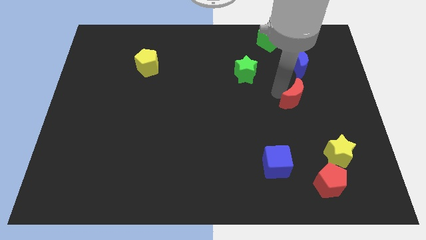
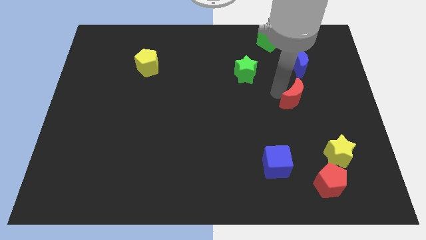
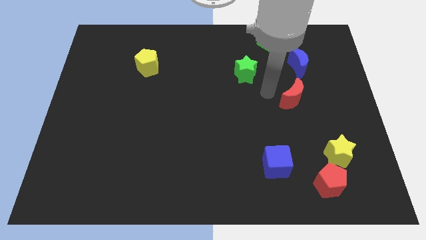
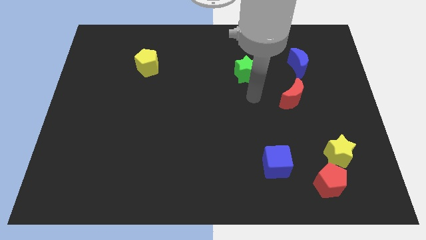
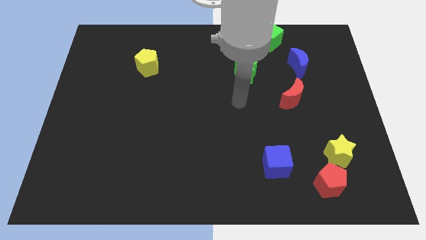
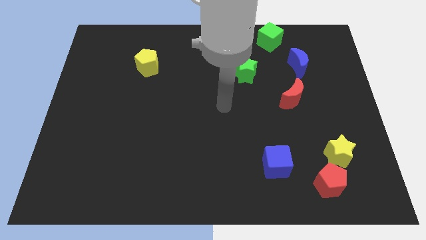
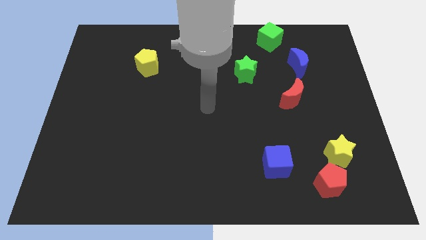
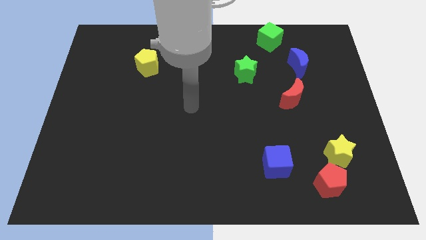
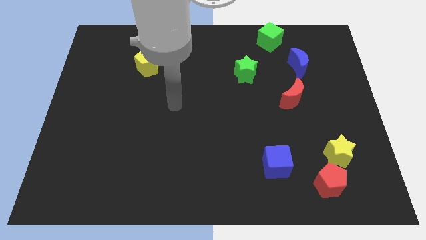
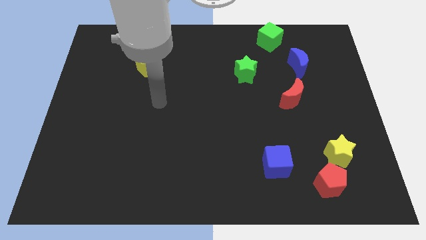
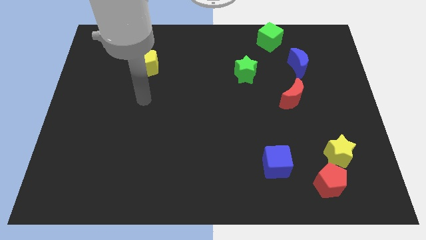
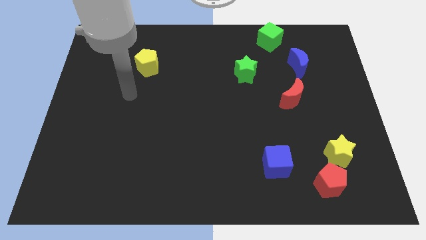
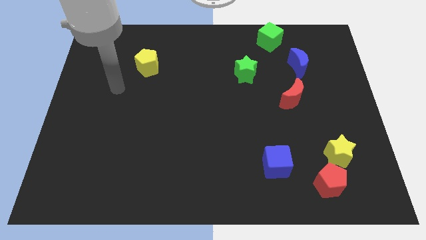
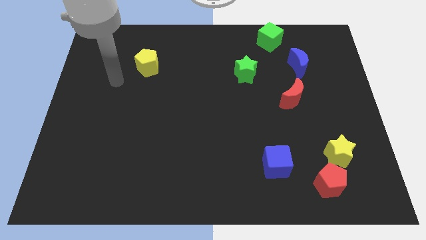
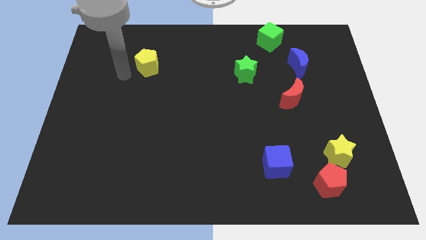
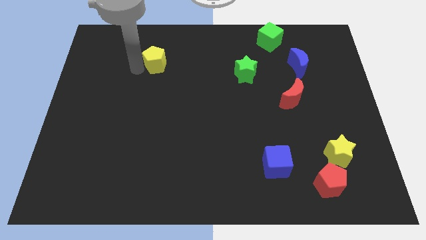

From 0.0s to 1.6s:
move your arm towards the yellow pentagon

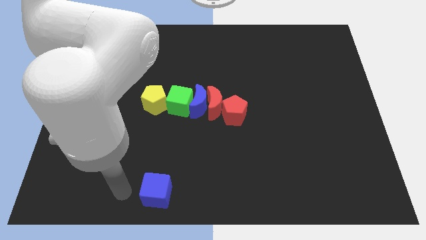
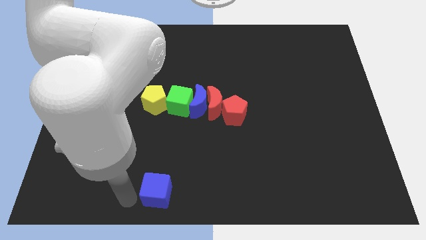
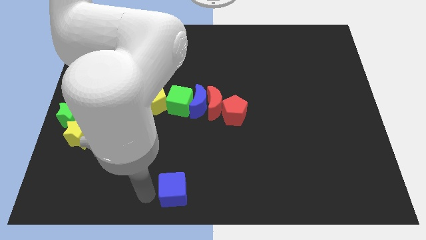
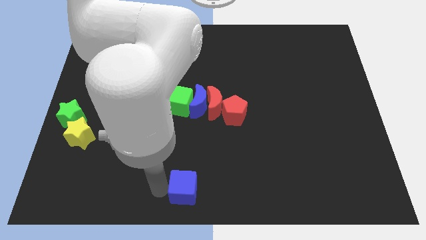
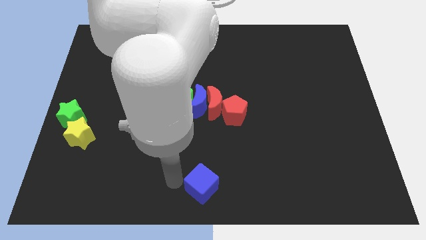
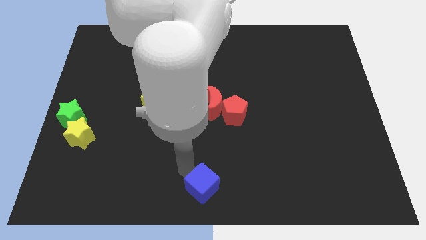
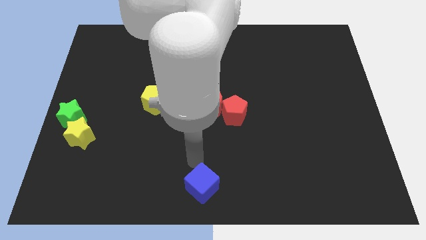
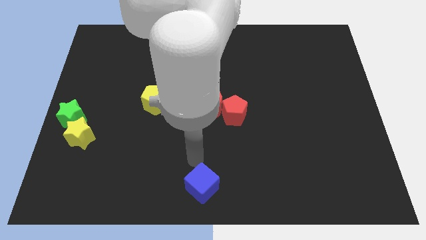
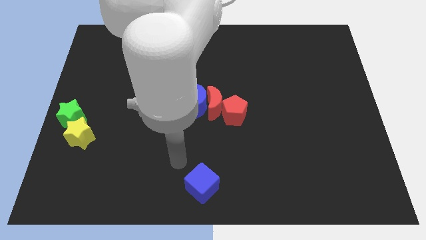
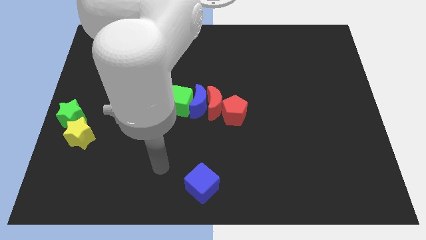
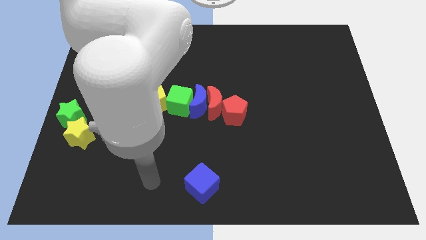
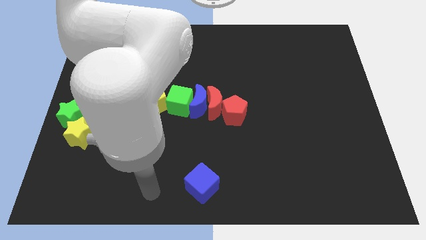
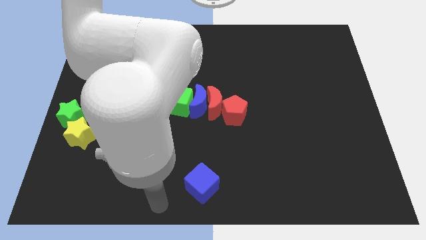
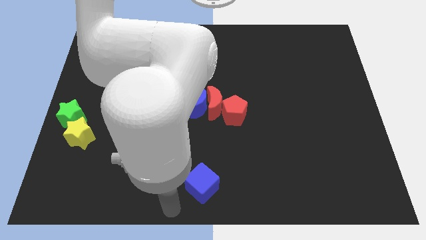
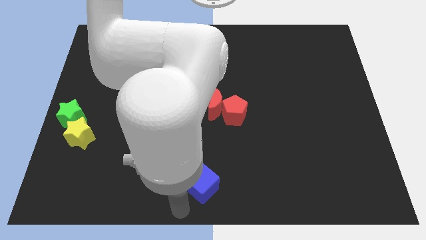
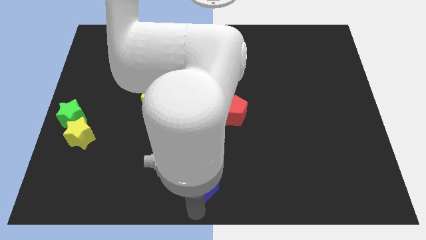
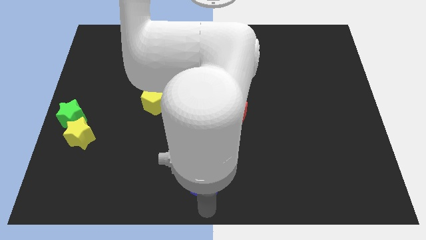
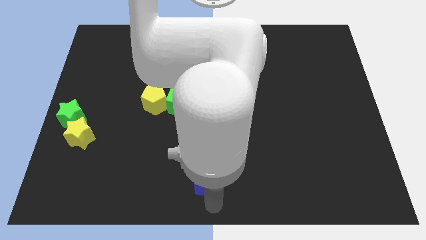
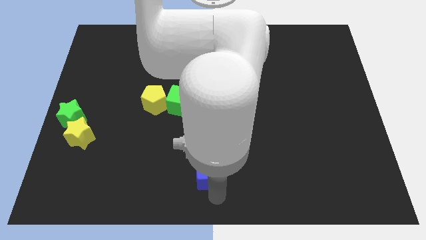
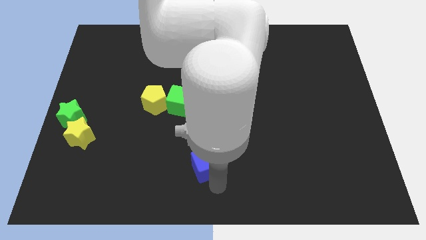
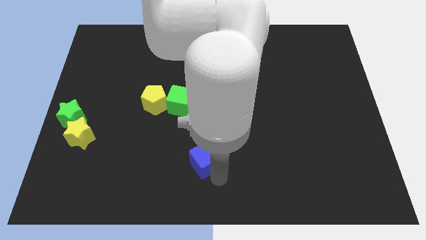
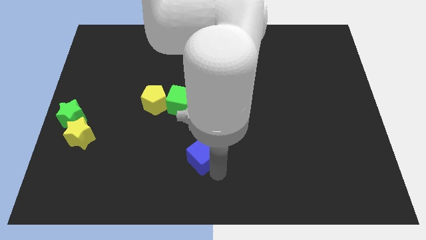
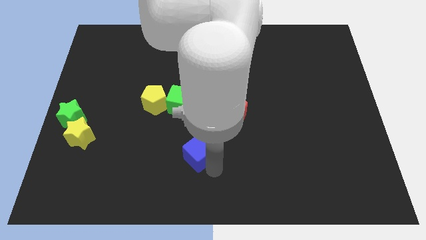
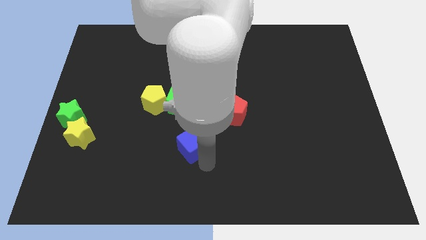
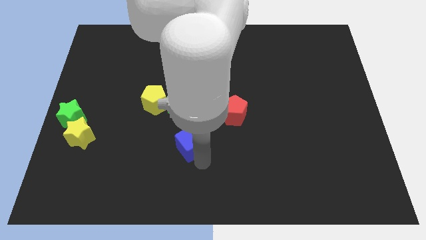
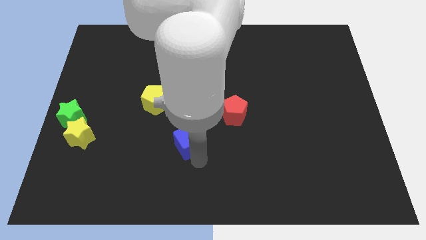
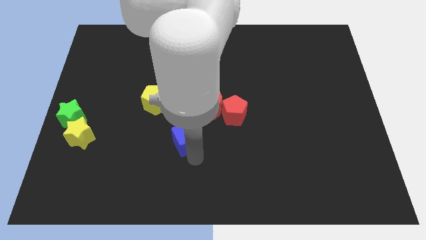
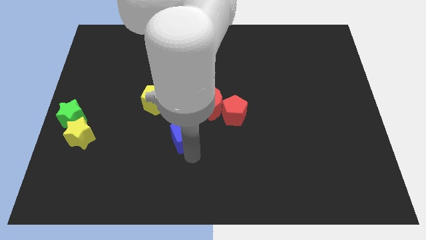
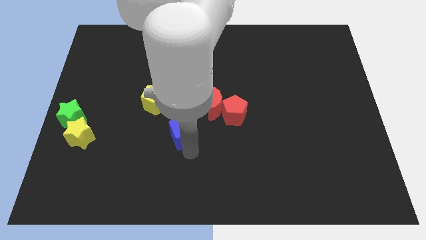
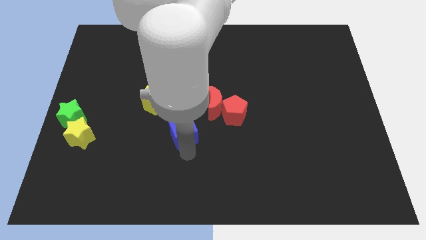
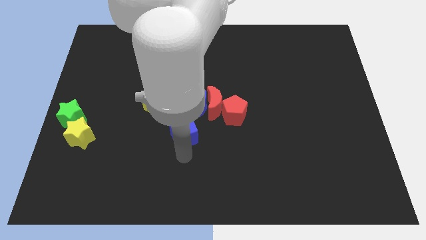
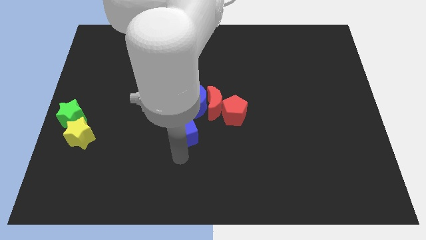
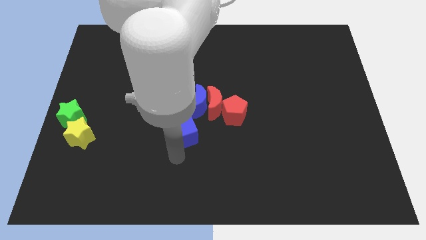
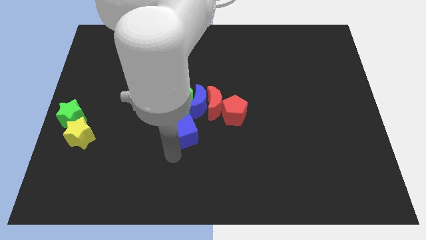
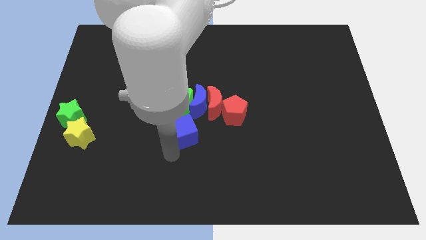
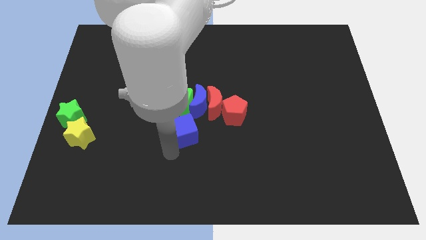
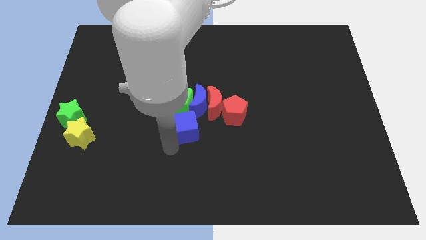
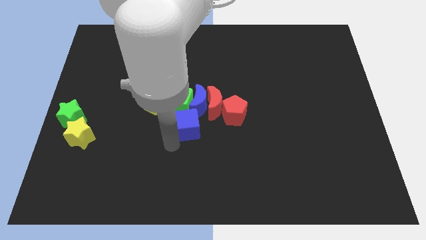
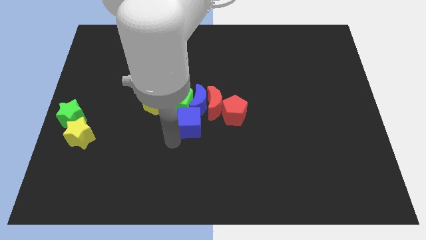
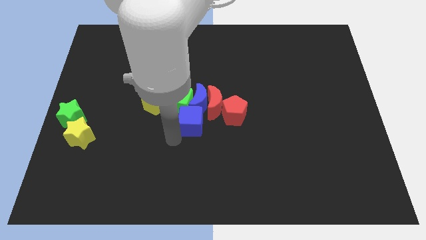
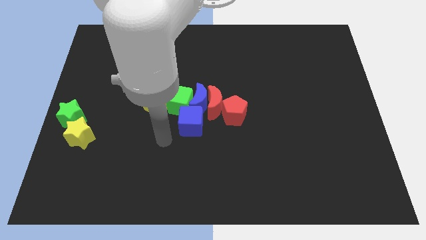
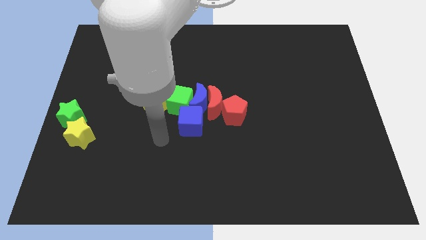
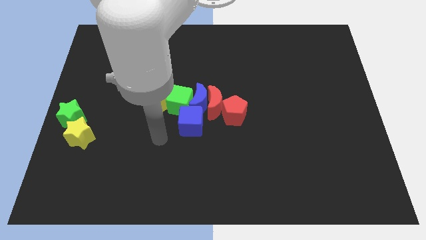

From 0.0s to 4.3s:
move blue cube into the blue moon

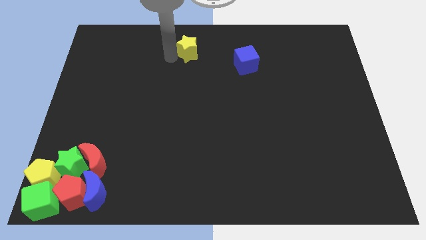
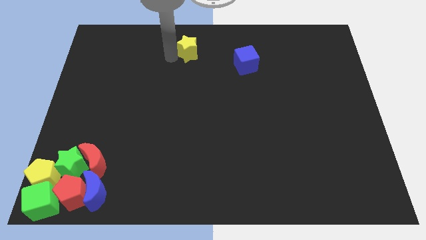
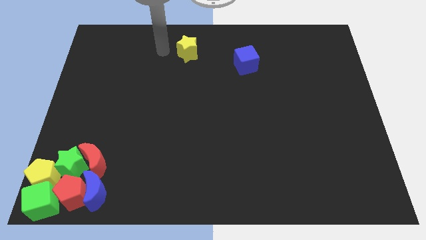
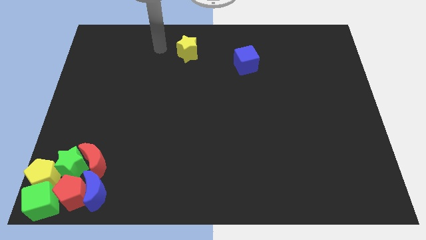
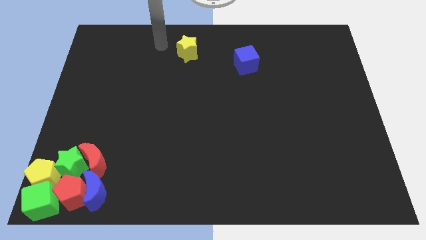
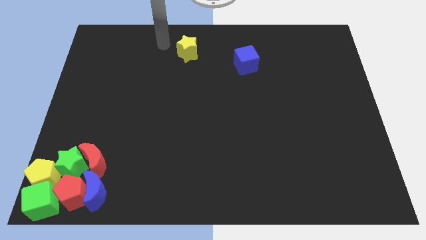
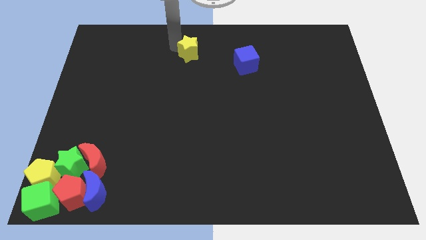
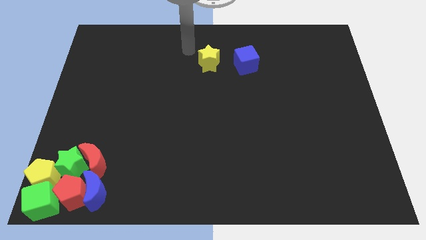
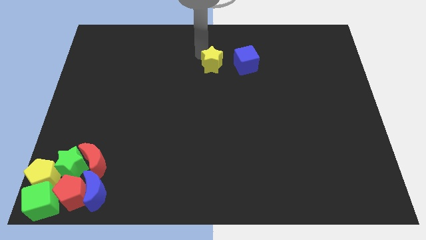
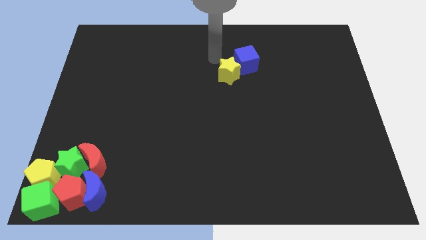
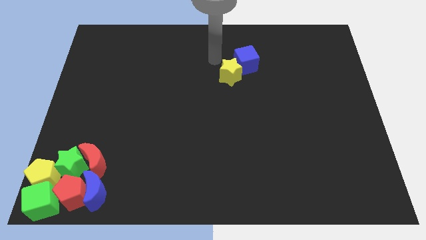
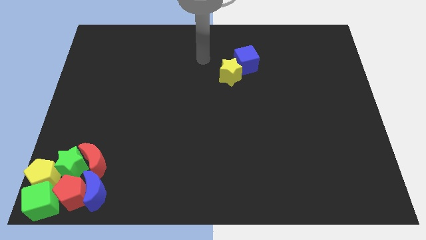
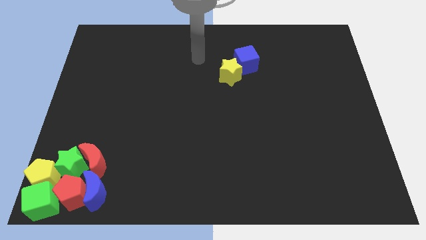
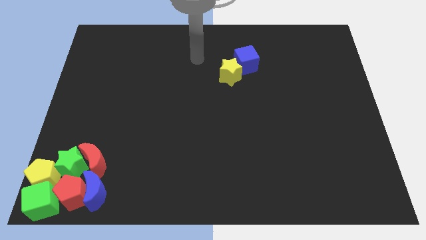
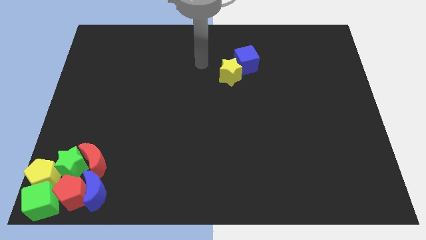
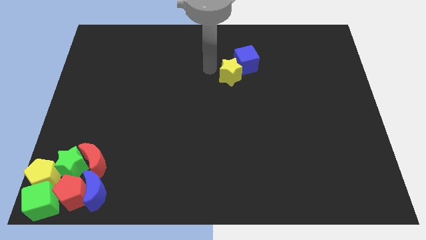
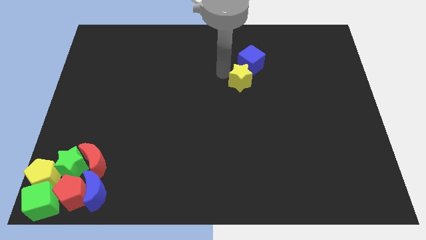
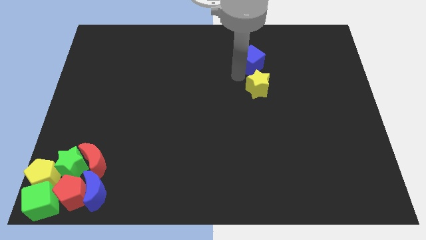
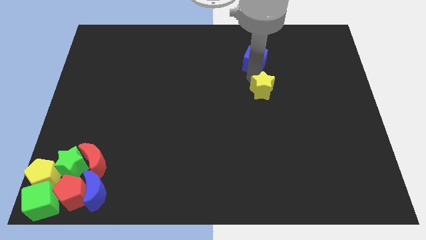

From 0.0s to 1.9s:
push the yellow star below blue cube

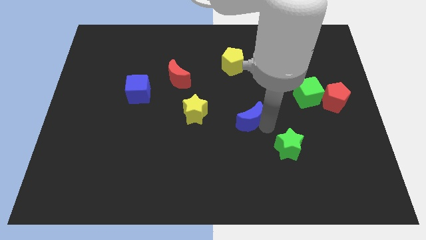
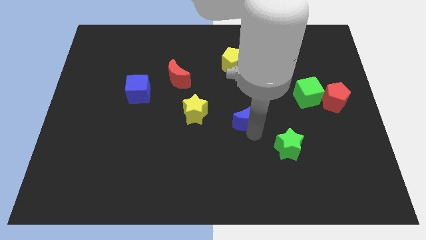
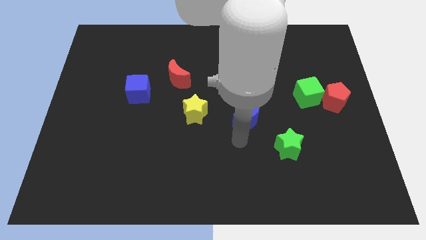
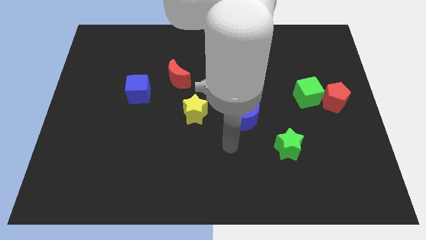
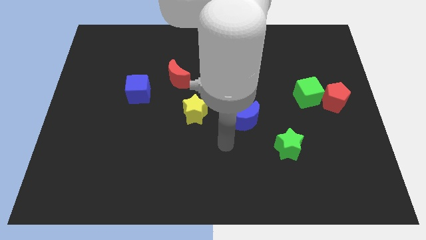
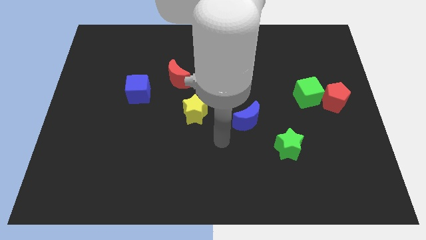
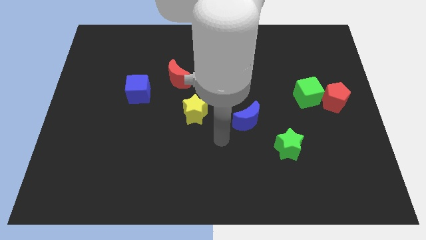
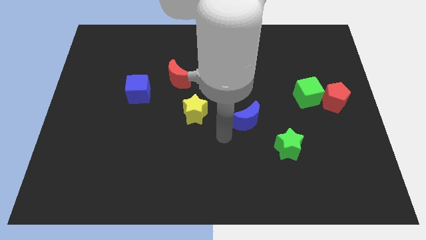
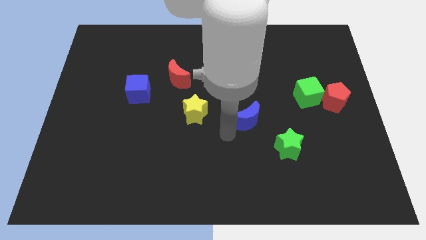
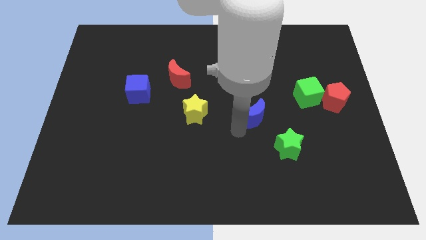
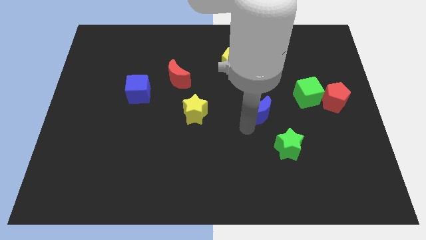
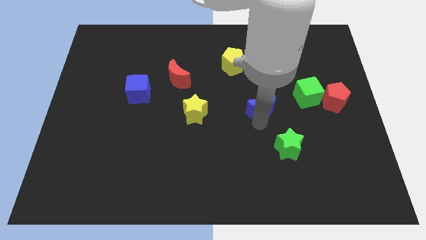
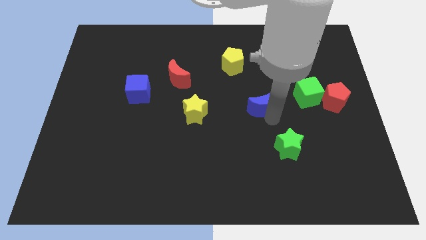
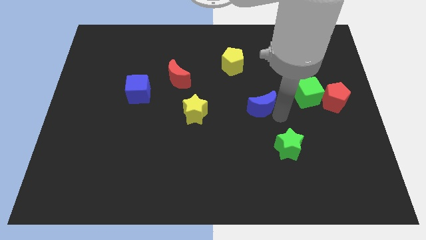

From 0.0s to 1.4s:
place the blue crescent in between the green cube and yellow star
